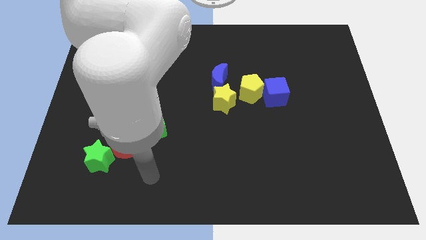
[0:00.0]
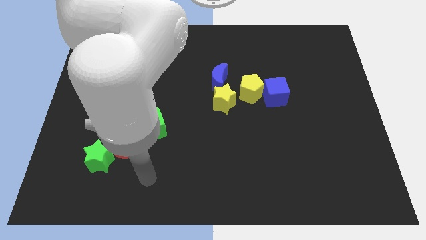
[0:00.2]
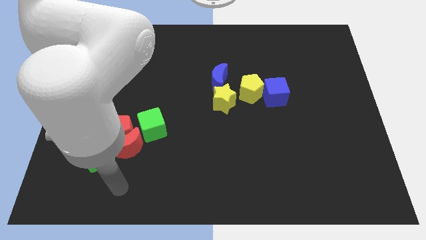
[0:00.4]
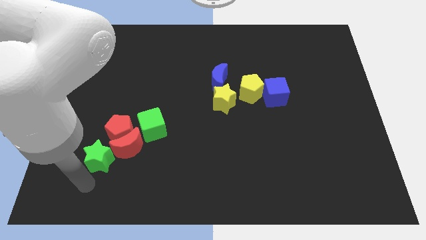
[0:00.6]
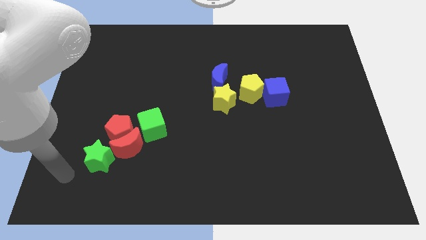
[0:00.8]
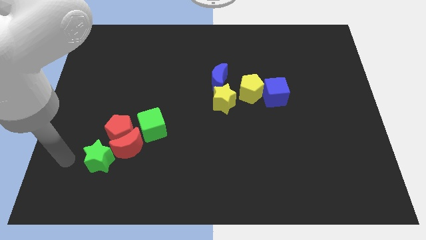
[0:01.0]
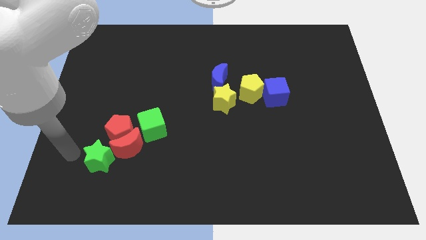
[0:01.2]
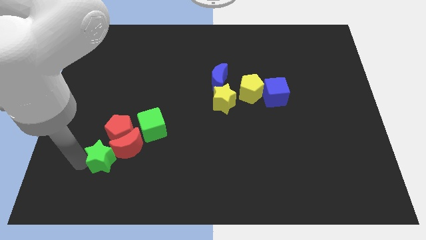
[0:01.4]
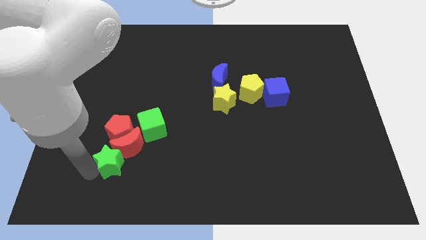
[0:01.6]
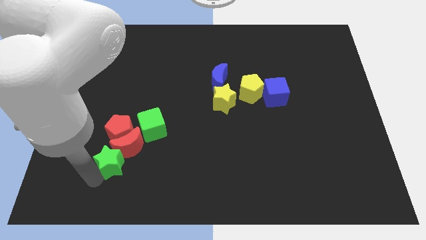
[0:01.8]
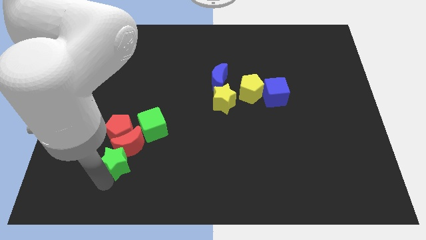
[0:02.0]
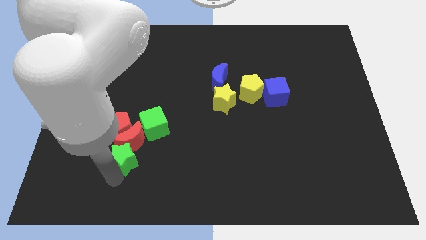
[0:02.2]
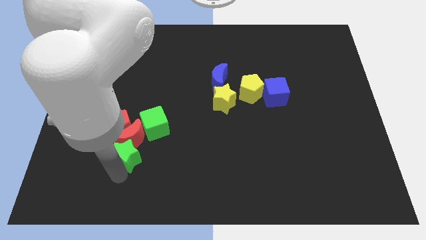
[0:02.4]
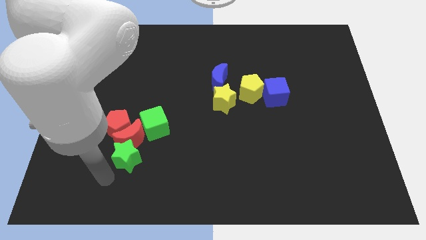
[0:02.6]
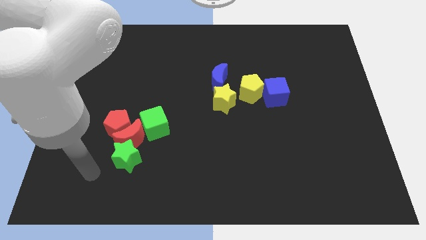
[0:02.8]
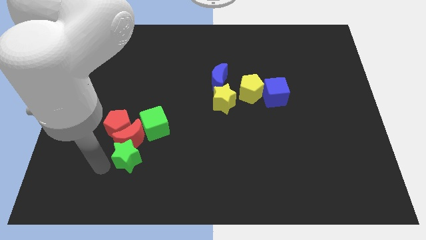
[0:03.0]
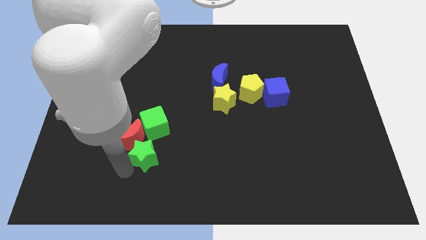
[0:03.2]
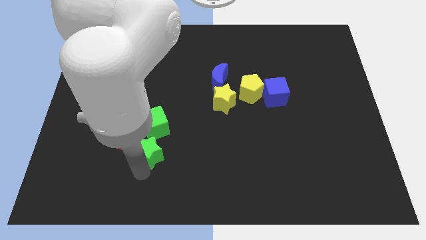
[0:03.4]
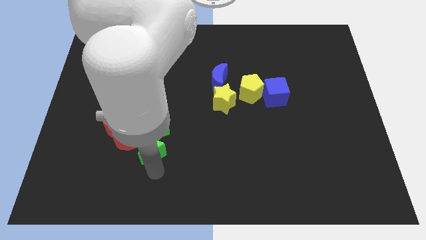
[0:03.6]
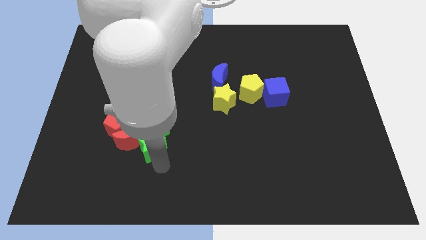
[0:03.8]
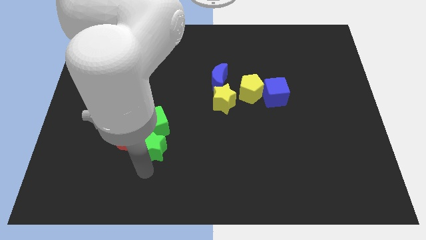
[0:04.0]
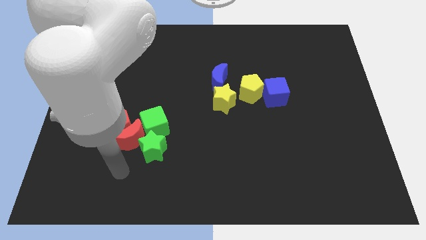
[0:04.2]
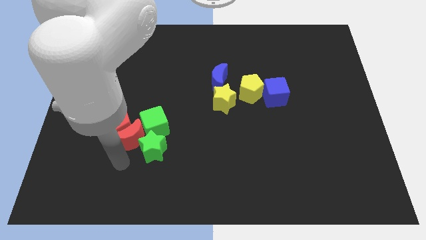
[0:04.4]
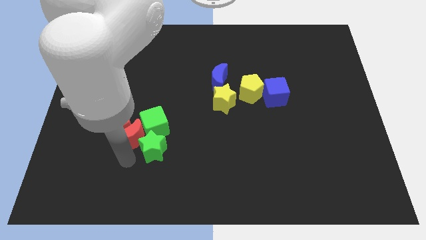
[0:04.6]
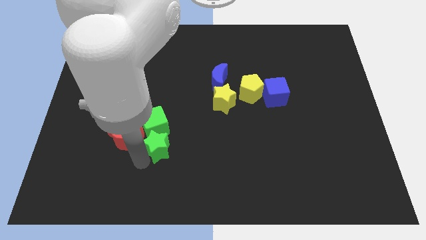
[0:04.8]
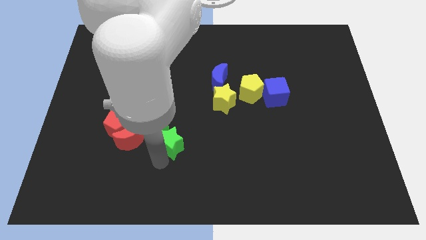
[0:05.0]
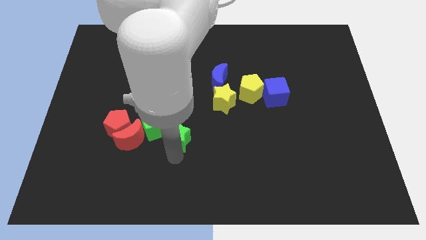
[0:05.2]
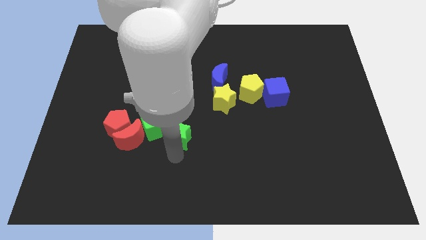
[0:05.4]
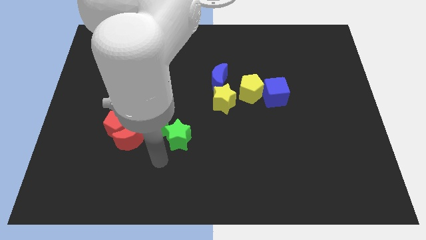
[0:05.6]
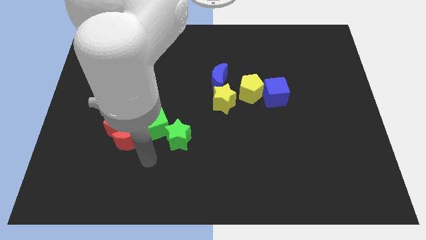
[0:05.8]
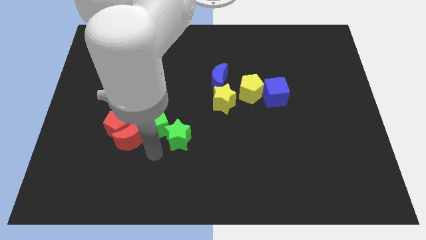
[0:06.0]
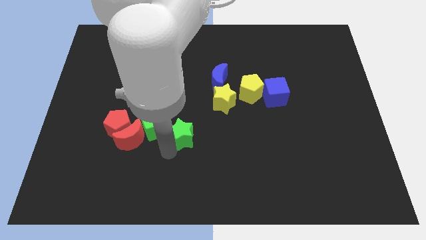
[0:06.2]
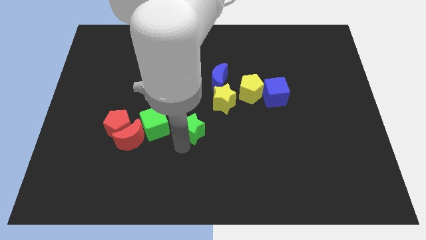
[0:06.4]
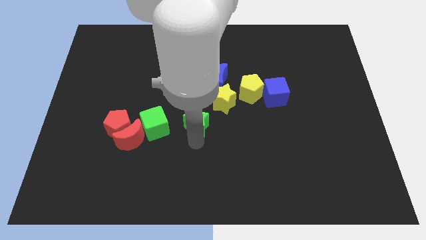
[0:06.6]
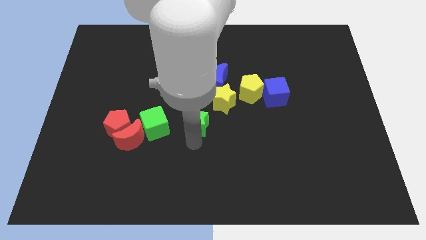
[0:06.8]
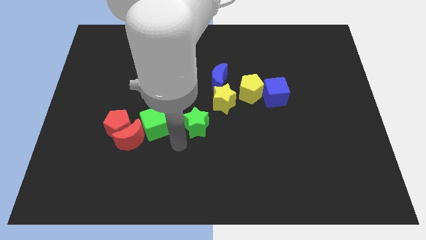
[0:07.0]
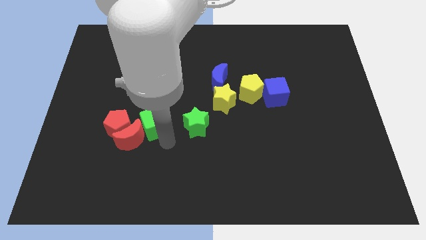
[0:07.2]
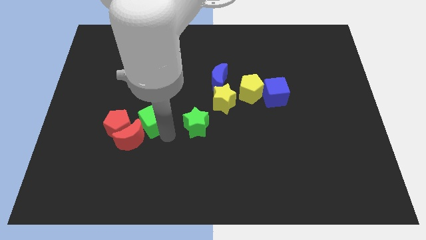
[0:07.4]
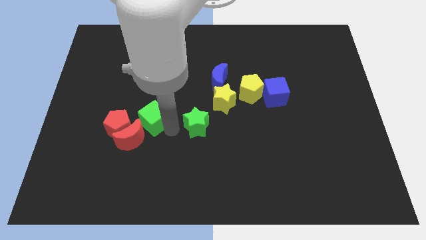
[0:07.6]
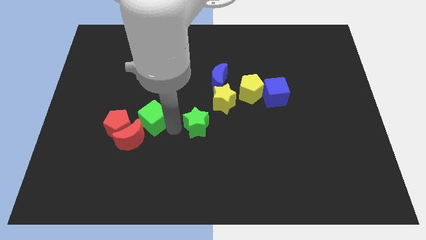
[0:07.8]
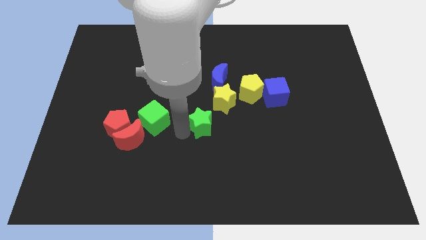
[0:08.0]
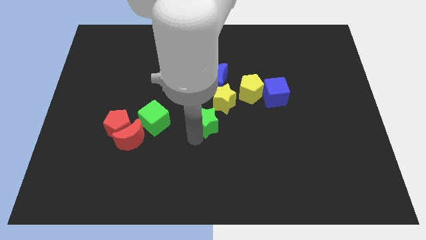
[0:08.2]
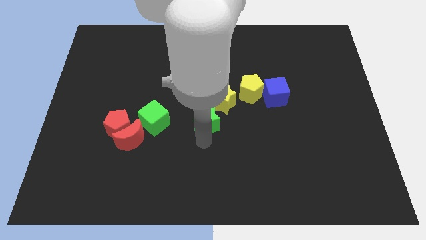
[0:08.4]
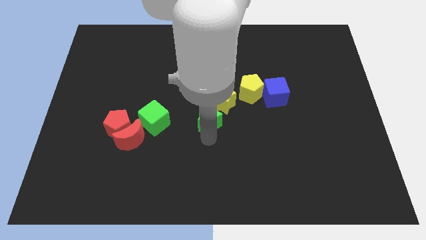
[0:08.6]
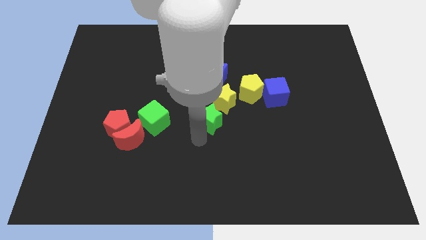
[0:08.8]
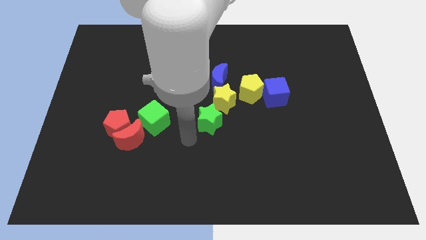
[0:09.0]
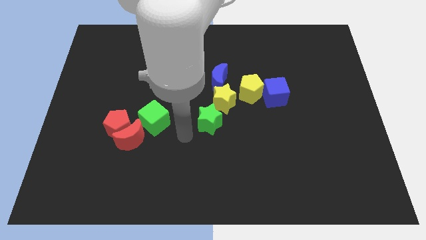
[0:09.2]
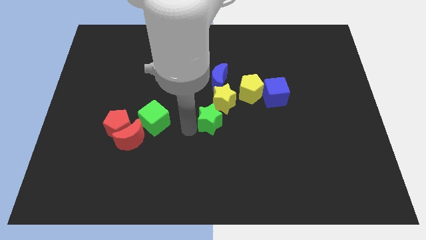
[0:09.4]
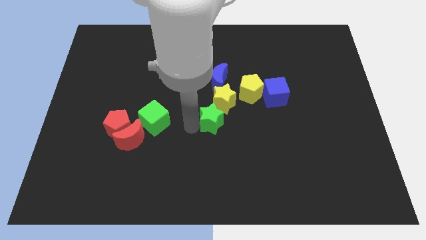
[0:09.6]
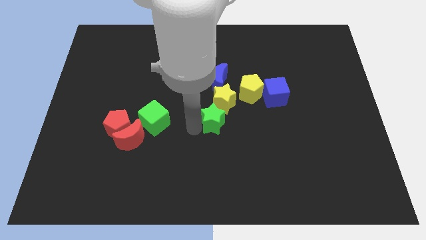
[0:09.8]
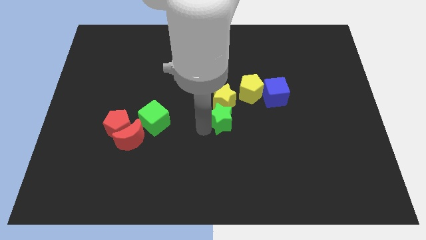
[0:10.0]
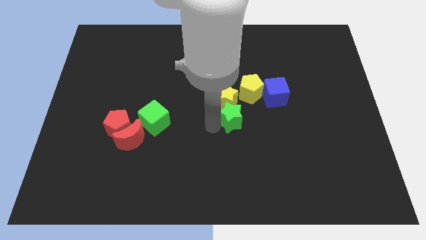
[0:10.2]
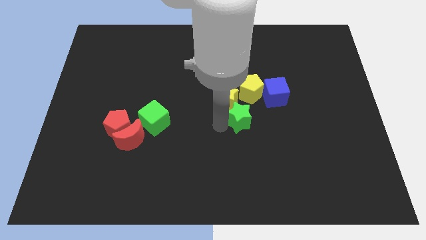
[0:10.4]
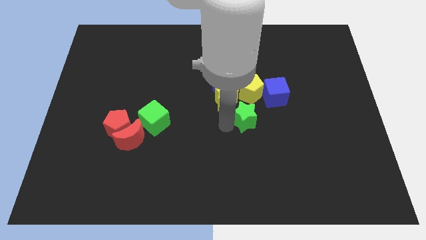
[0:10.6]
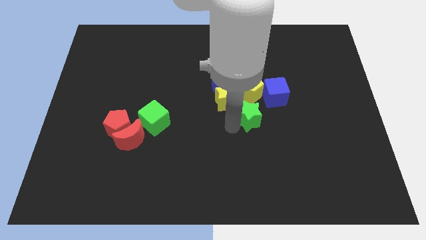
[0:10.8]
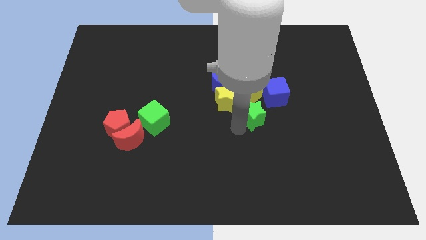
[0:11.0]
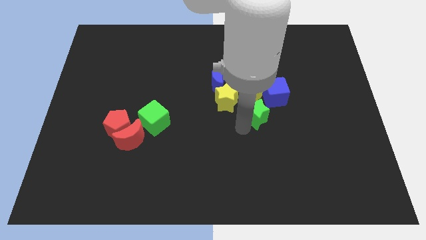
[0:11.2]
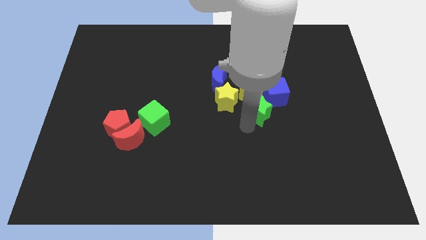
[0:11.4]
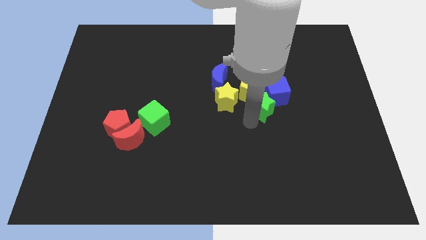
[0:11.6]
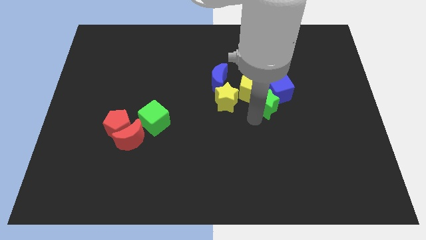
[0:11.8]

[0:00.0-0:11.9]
push the green star to the blue cube

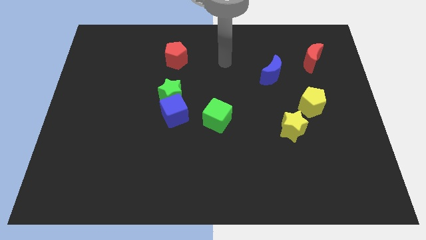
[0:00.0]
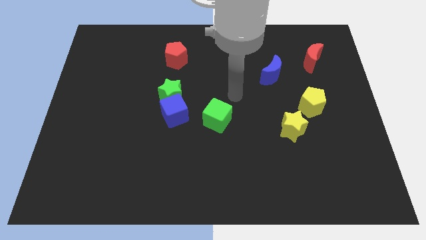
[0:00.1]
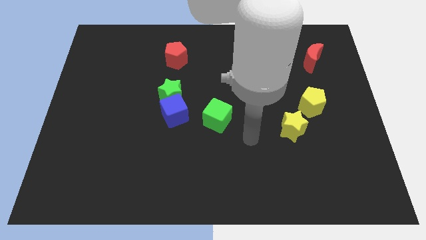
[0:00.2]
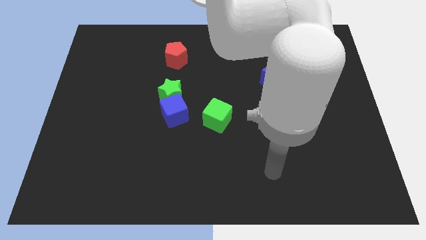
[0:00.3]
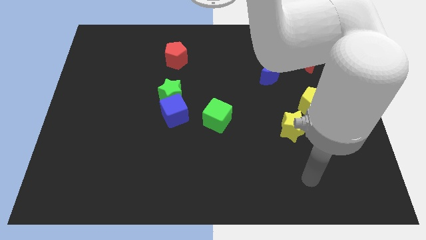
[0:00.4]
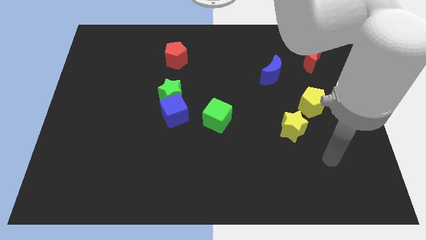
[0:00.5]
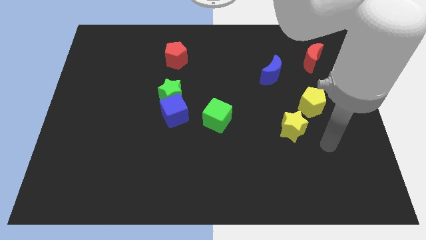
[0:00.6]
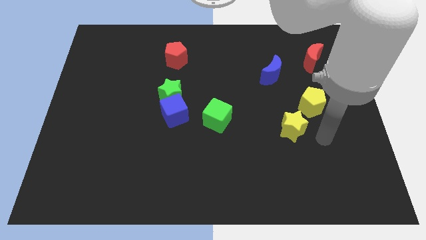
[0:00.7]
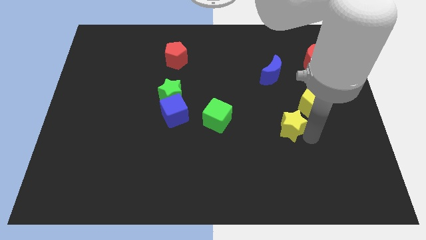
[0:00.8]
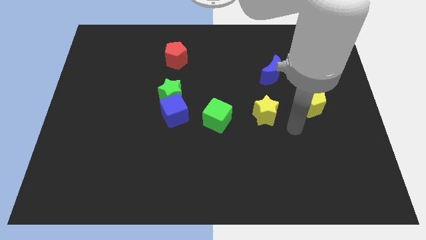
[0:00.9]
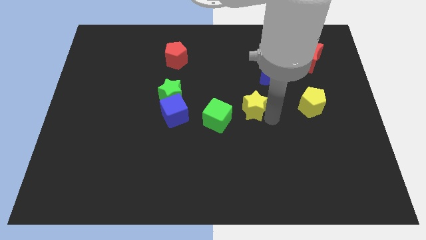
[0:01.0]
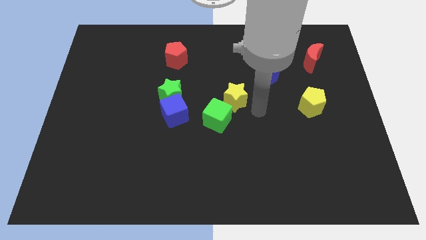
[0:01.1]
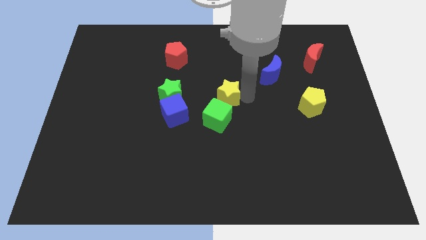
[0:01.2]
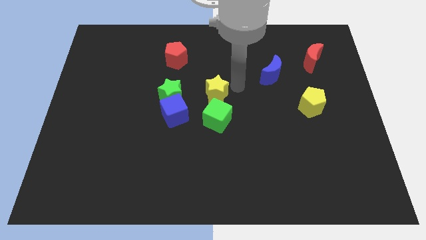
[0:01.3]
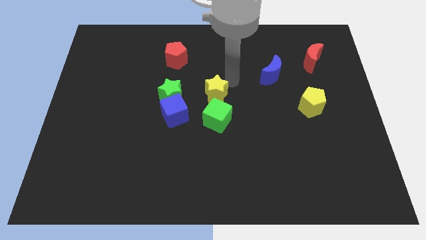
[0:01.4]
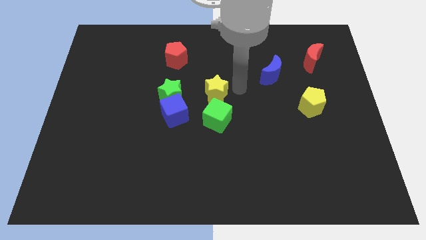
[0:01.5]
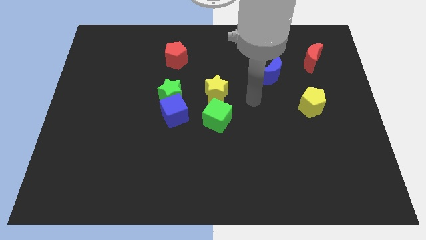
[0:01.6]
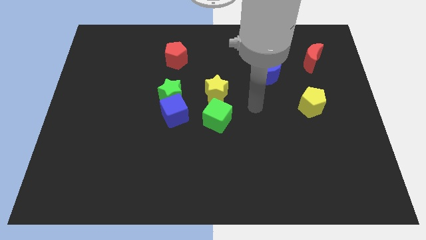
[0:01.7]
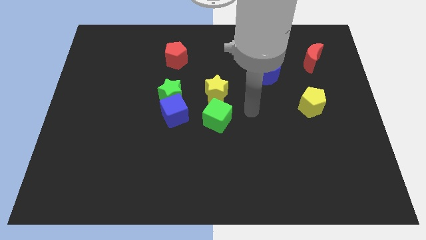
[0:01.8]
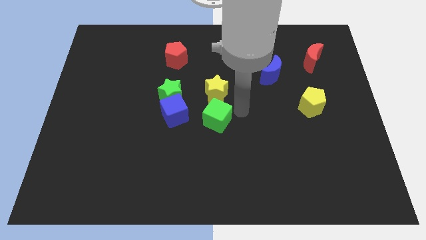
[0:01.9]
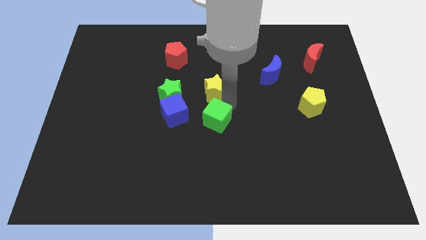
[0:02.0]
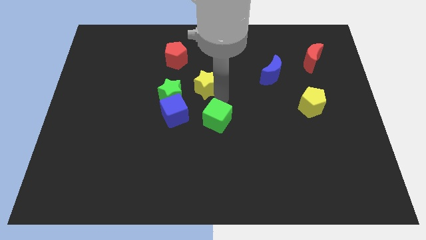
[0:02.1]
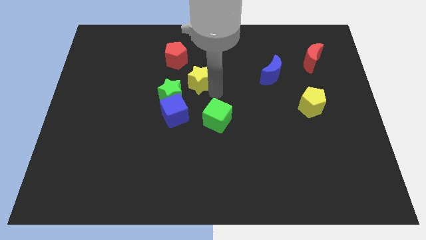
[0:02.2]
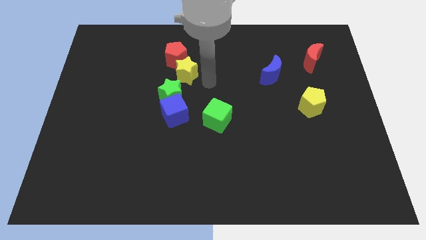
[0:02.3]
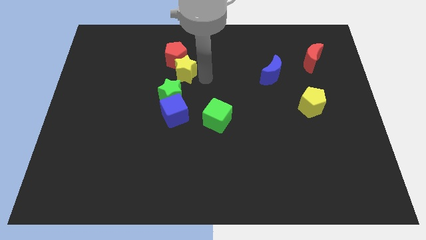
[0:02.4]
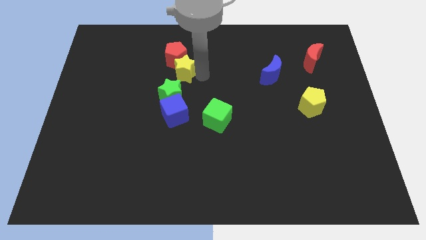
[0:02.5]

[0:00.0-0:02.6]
move the yellow star close to the red pentagon
